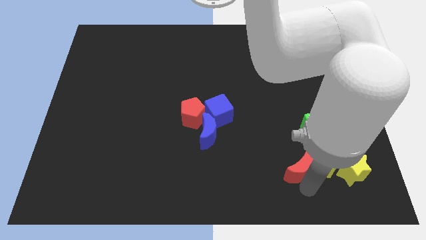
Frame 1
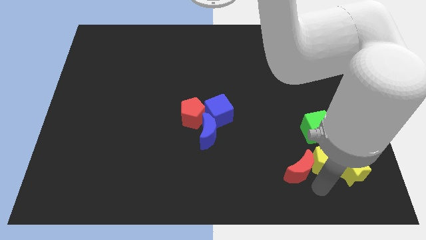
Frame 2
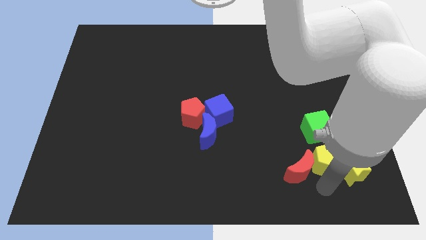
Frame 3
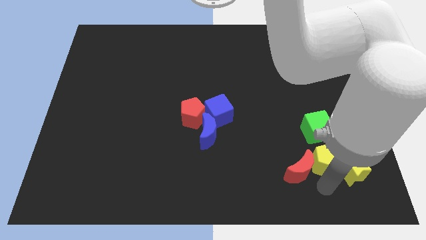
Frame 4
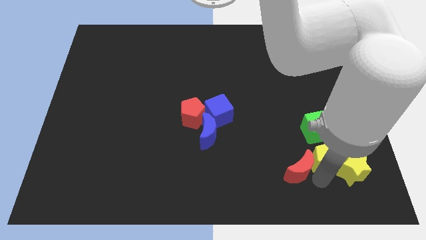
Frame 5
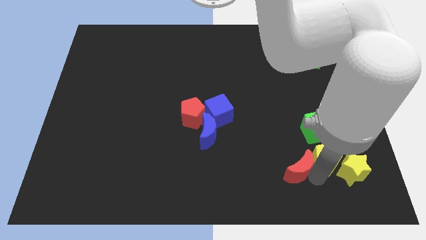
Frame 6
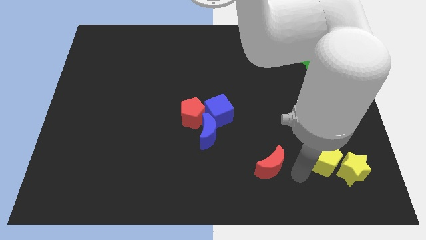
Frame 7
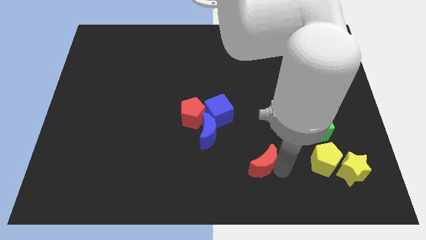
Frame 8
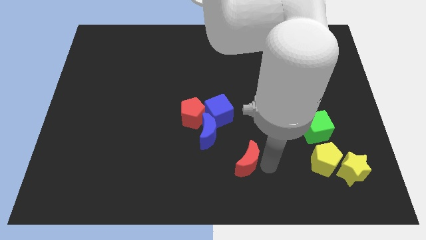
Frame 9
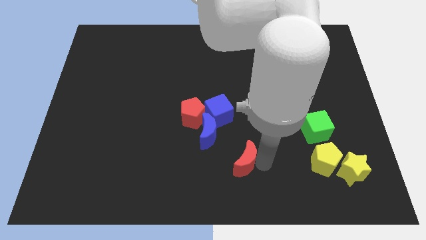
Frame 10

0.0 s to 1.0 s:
separate red moon and the yellow pentagon

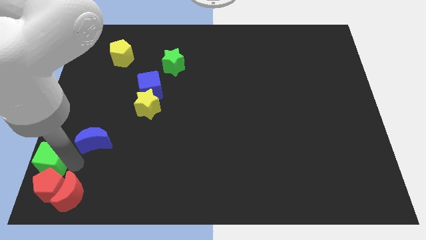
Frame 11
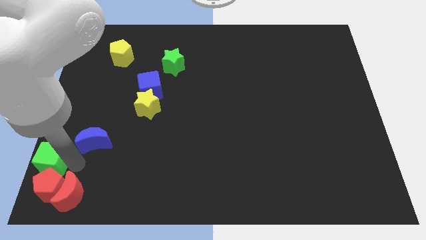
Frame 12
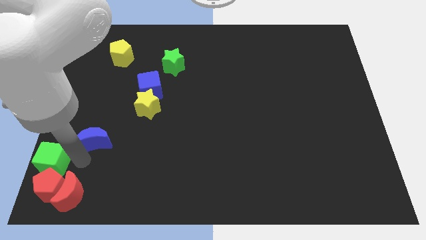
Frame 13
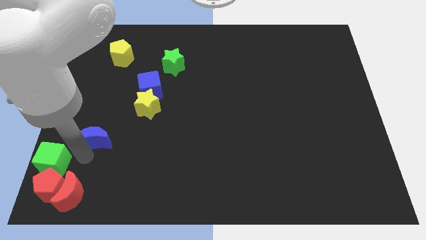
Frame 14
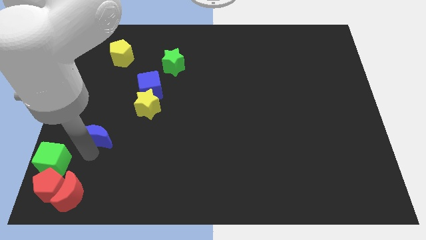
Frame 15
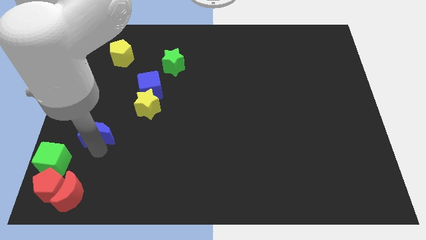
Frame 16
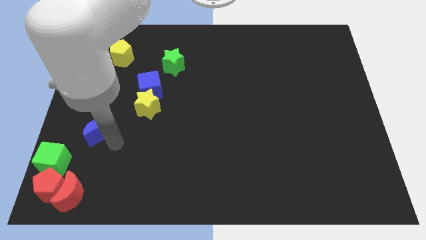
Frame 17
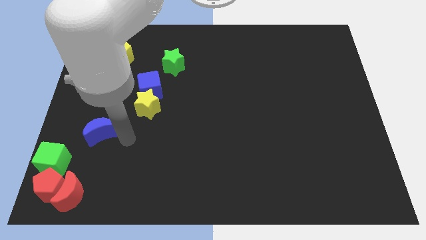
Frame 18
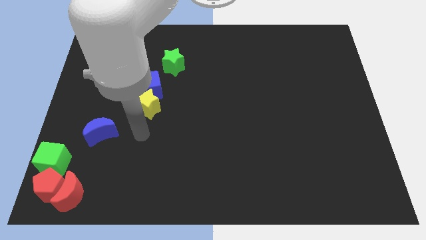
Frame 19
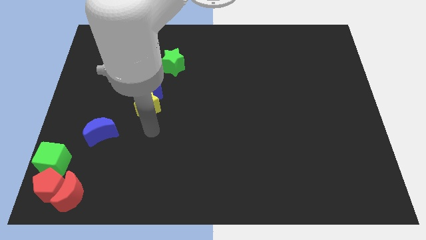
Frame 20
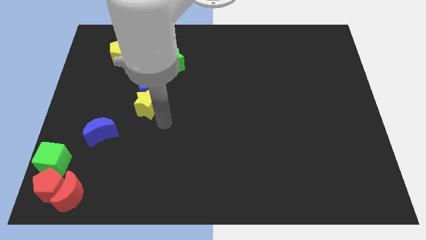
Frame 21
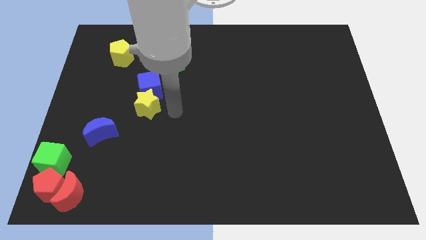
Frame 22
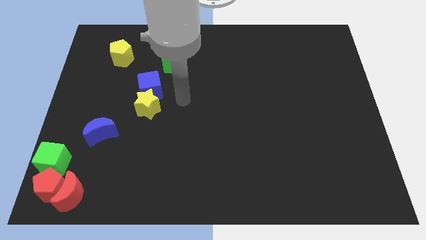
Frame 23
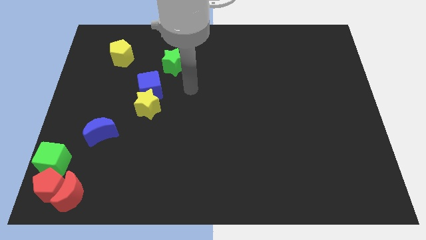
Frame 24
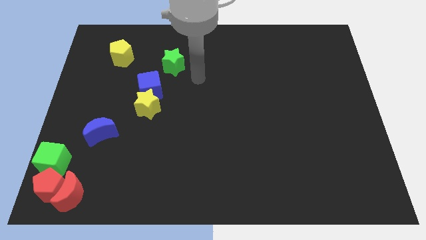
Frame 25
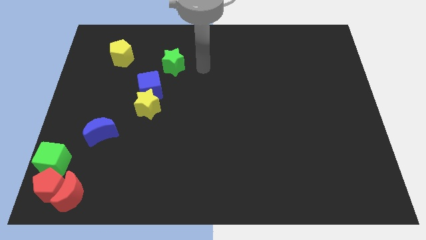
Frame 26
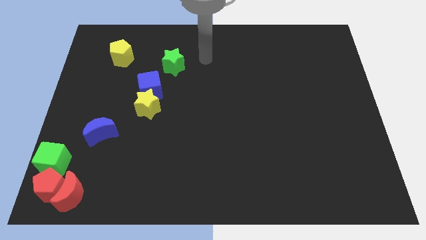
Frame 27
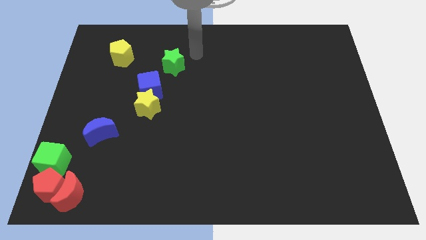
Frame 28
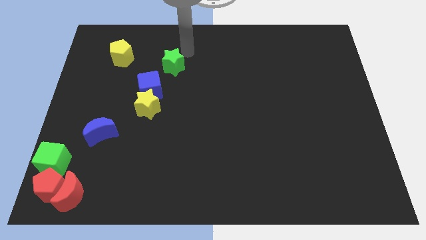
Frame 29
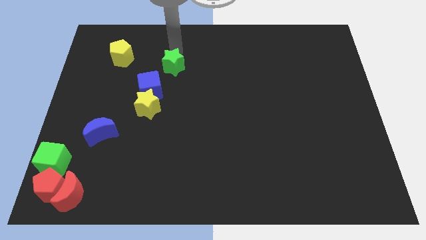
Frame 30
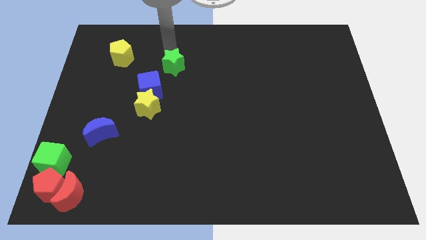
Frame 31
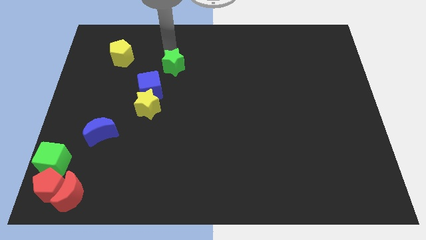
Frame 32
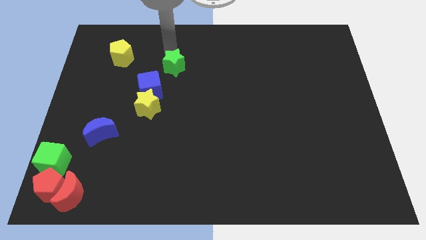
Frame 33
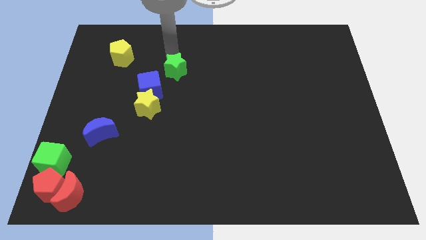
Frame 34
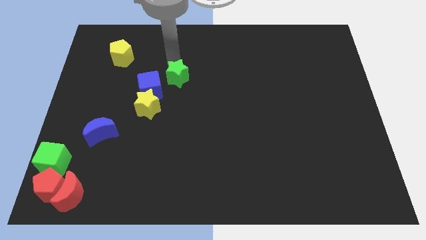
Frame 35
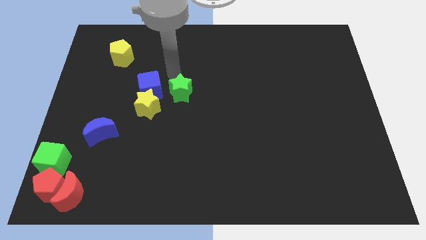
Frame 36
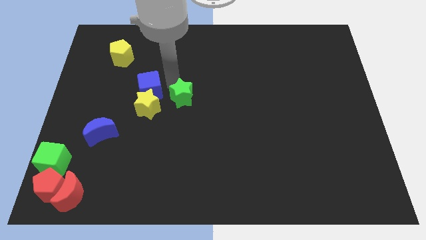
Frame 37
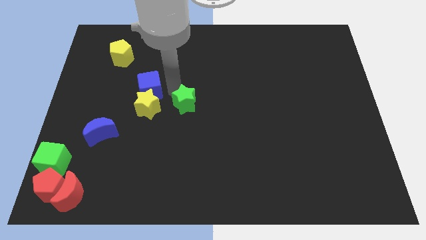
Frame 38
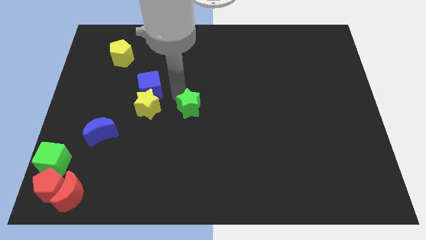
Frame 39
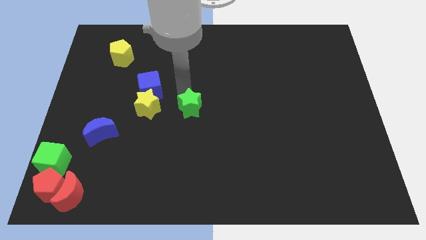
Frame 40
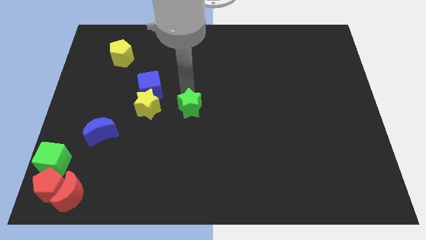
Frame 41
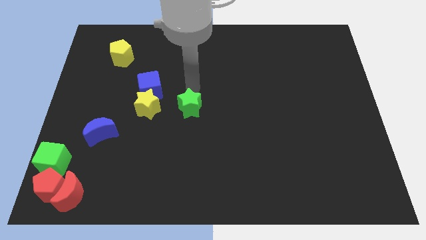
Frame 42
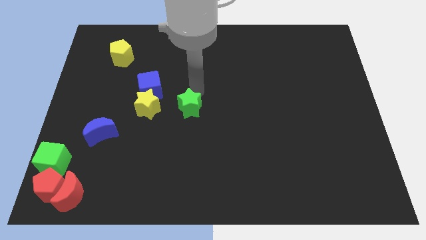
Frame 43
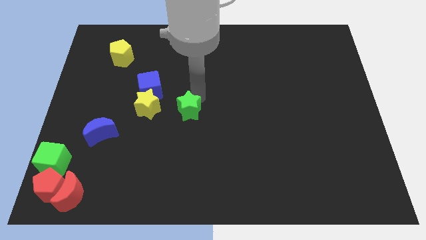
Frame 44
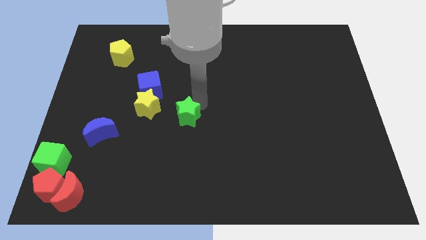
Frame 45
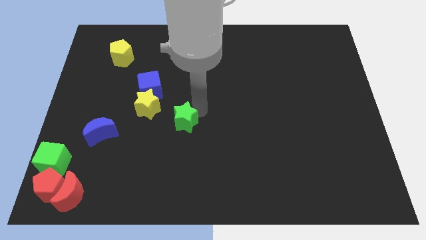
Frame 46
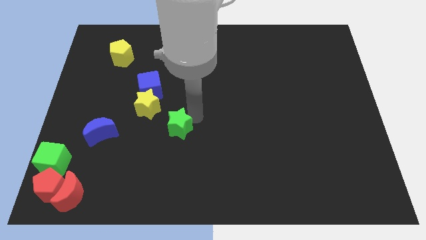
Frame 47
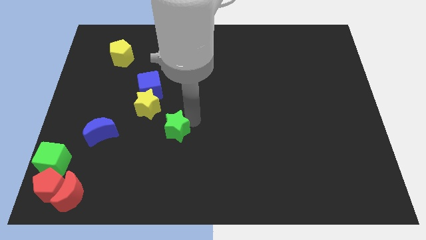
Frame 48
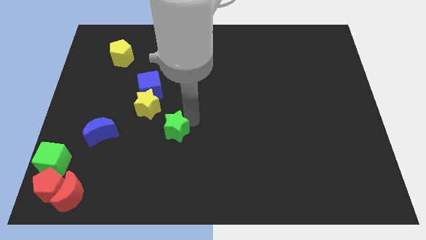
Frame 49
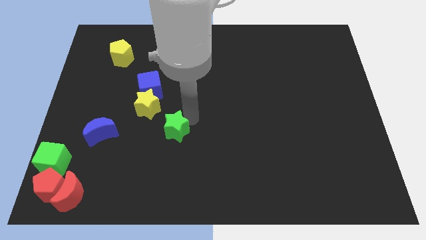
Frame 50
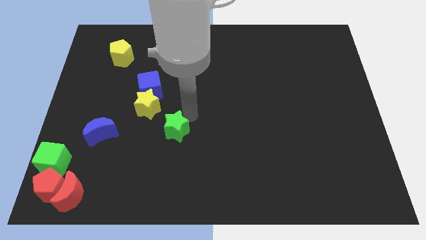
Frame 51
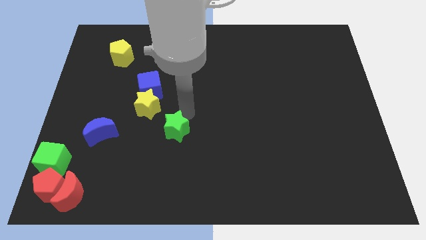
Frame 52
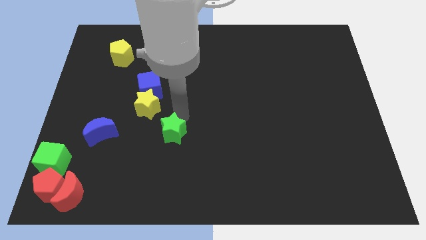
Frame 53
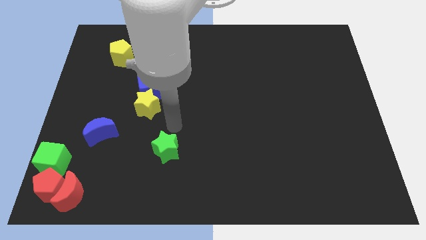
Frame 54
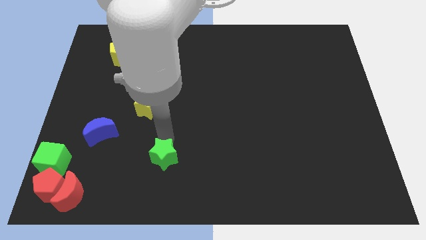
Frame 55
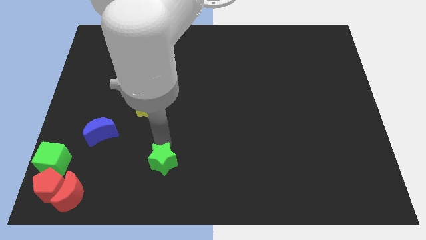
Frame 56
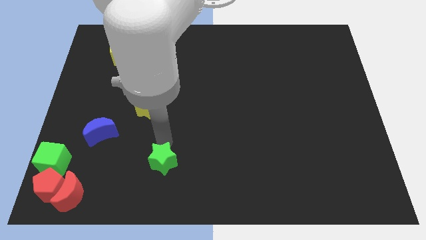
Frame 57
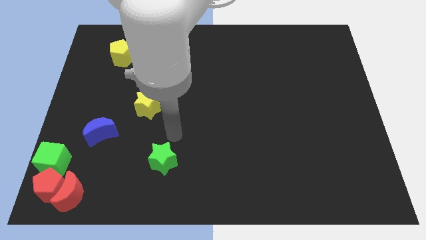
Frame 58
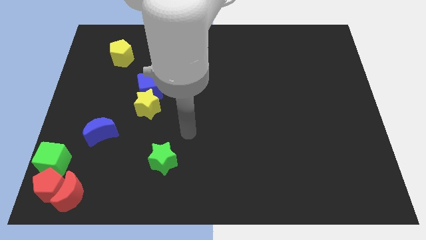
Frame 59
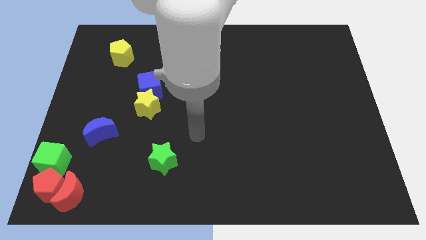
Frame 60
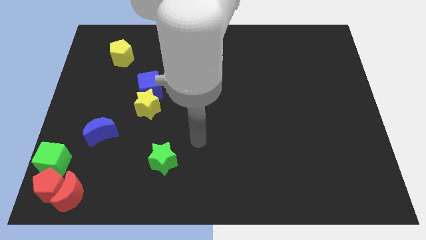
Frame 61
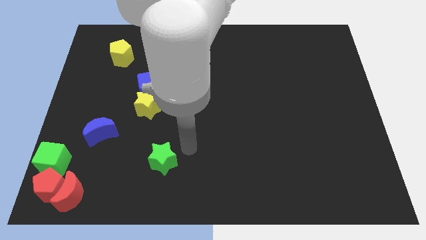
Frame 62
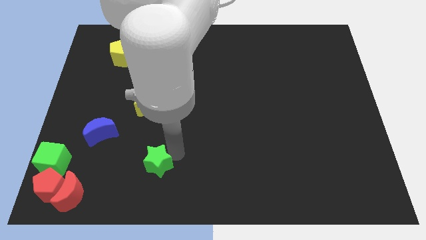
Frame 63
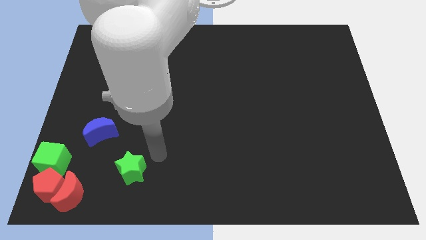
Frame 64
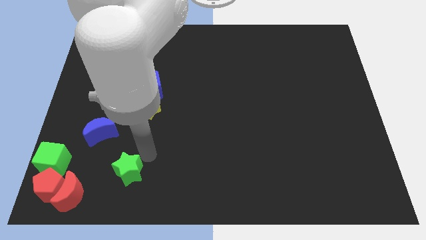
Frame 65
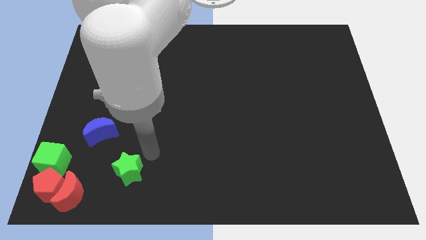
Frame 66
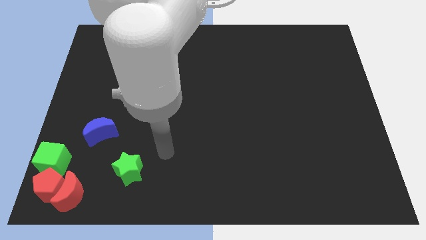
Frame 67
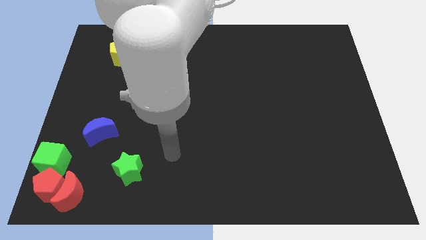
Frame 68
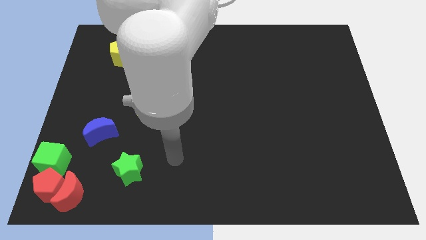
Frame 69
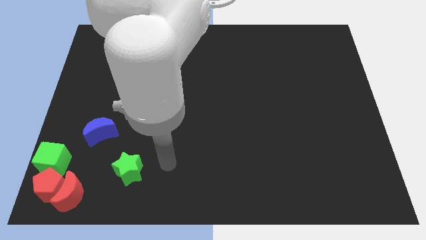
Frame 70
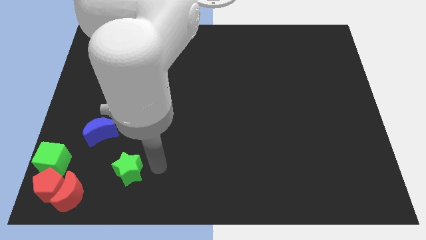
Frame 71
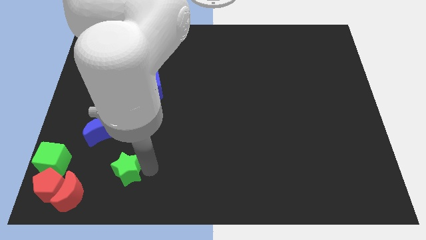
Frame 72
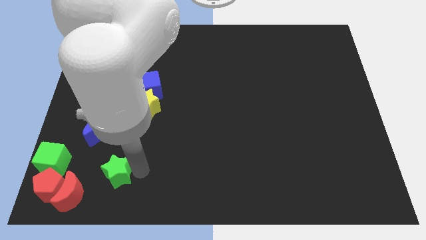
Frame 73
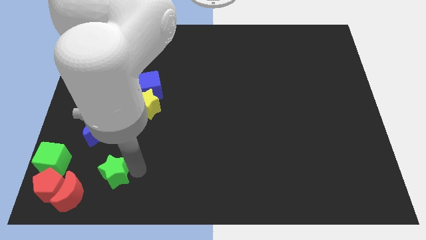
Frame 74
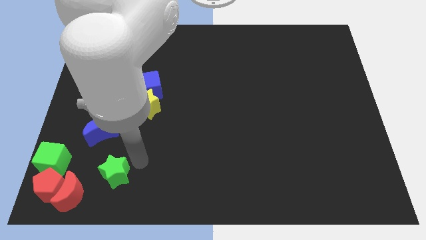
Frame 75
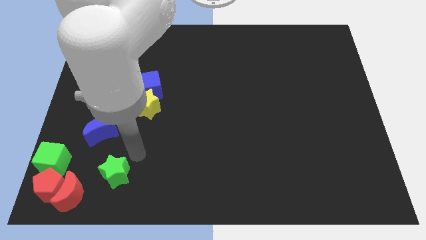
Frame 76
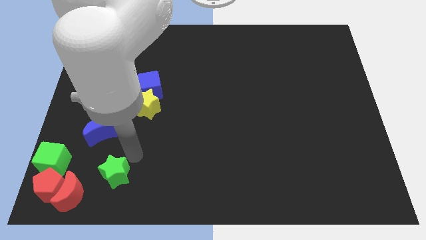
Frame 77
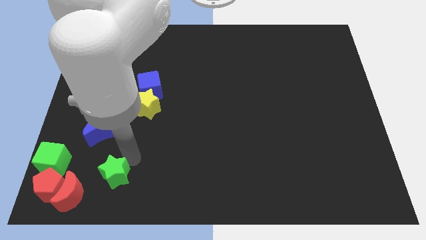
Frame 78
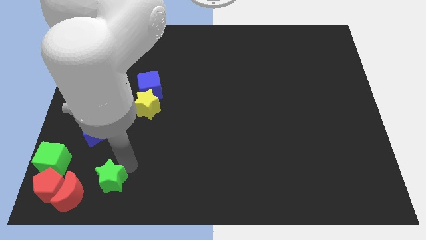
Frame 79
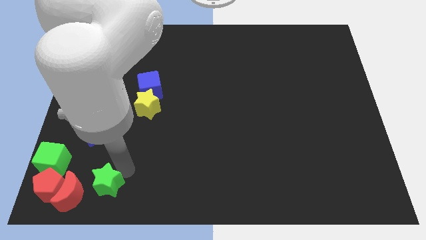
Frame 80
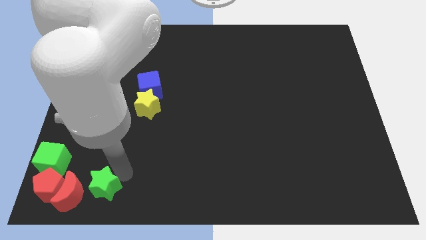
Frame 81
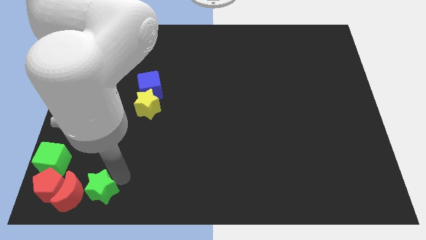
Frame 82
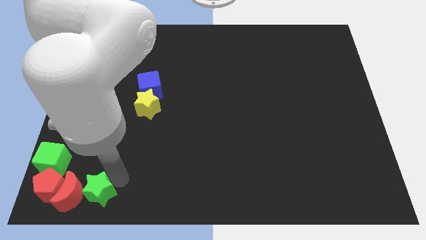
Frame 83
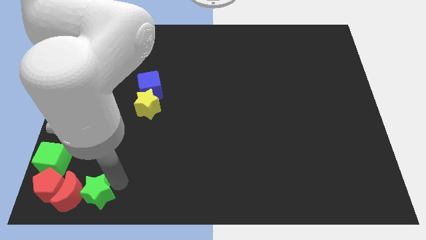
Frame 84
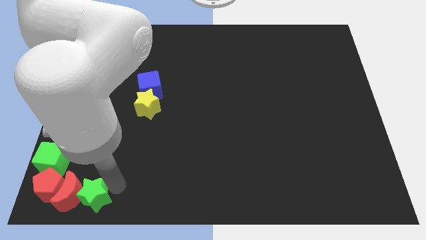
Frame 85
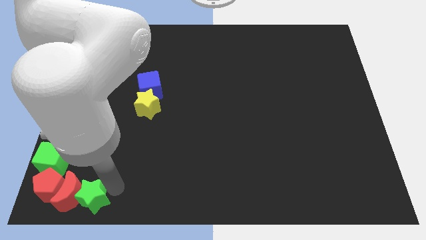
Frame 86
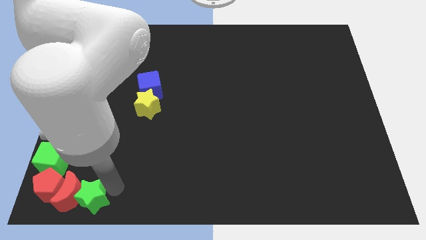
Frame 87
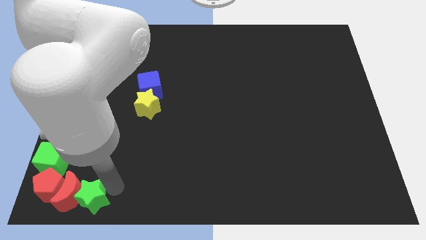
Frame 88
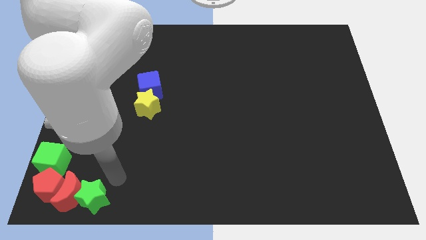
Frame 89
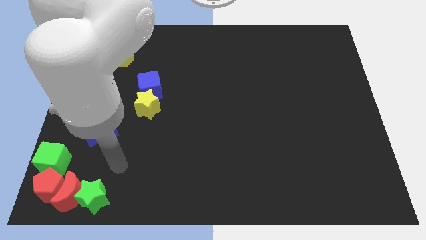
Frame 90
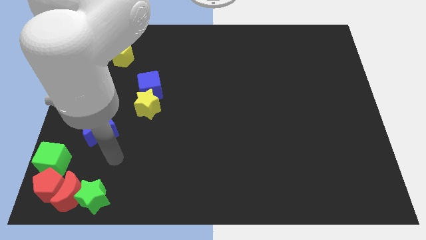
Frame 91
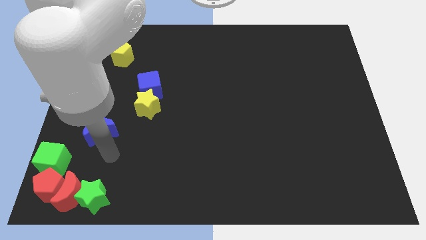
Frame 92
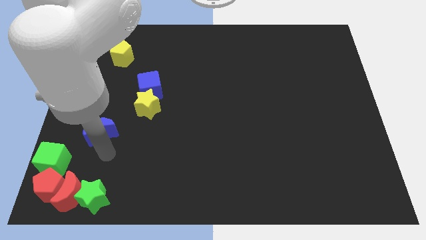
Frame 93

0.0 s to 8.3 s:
push the green star to the right of the red crescent
